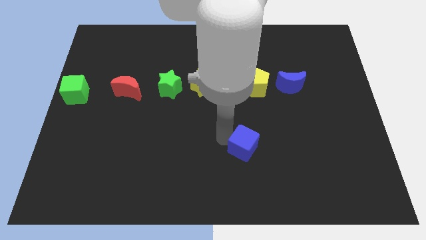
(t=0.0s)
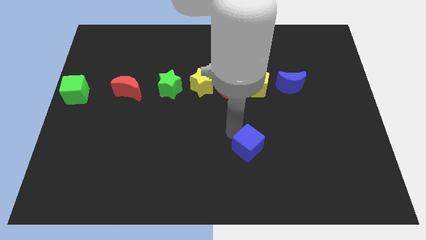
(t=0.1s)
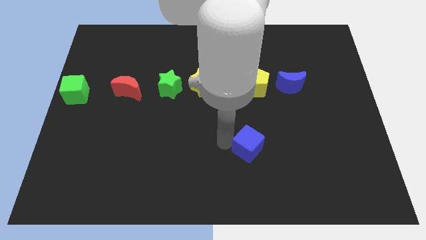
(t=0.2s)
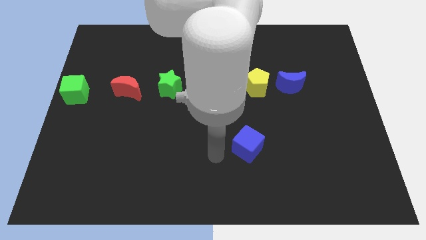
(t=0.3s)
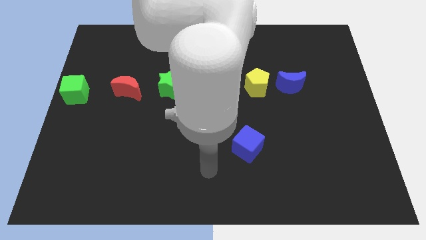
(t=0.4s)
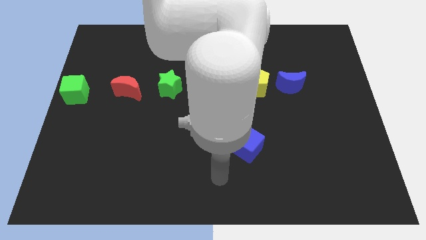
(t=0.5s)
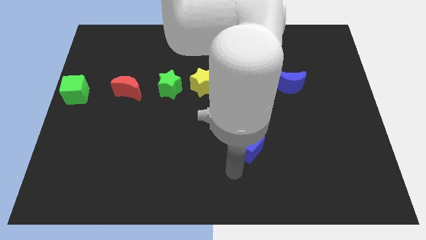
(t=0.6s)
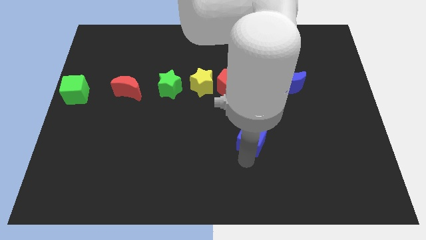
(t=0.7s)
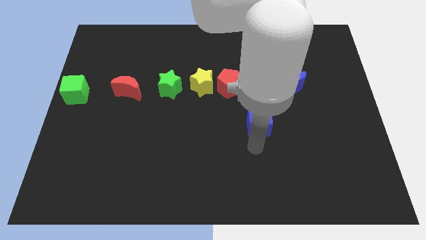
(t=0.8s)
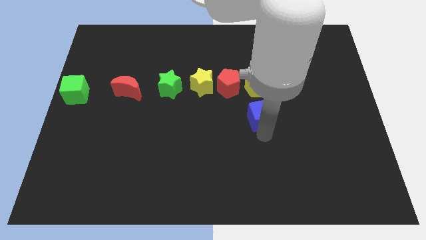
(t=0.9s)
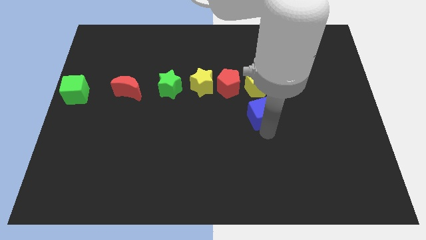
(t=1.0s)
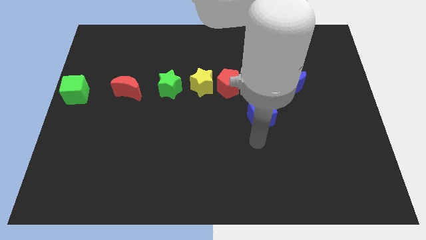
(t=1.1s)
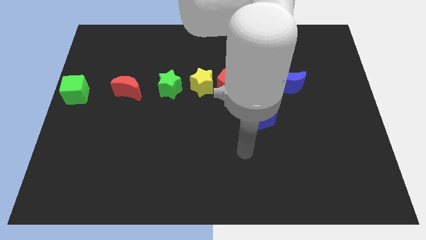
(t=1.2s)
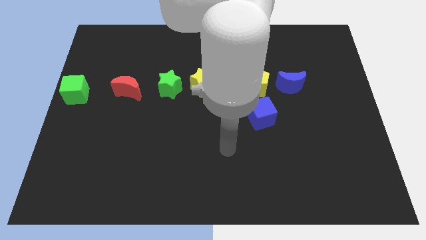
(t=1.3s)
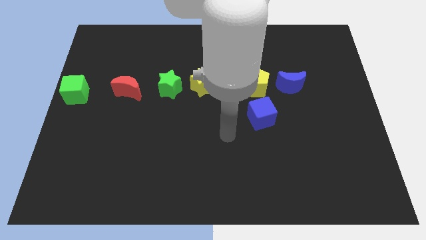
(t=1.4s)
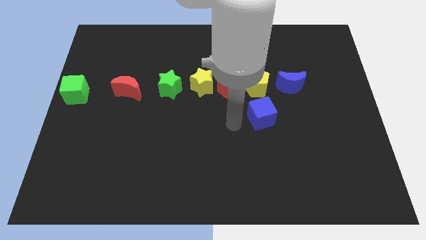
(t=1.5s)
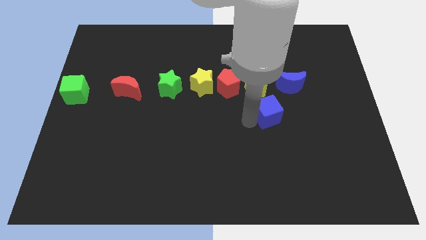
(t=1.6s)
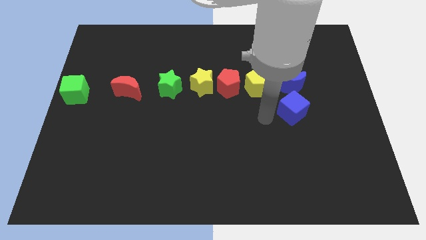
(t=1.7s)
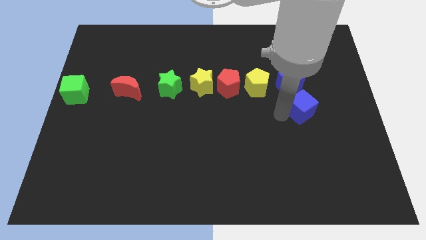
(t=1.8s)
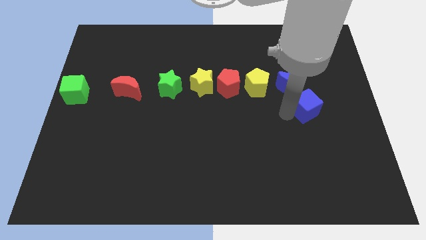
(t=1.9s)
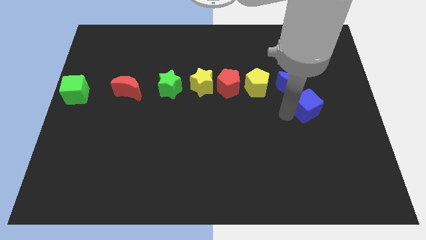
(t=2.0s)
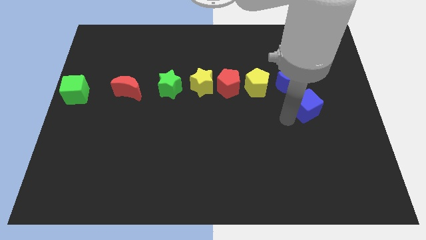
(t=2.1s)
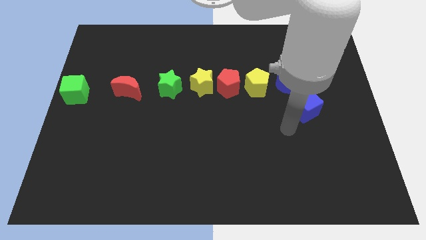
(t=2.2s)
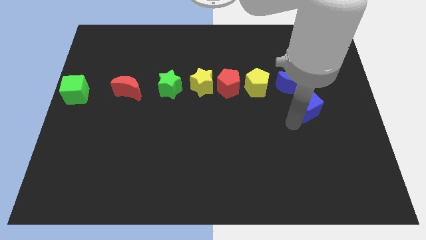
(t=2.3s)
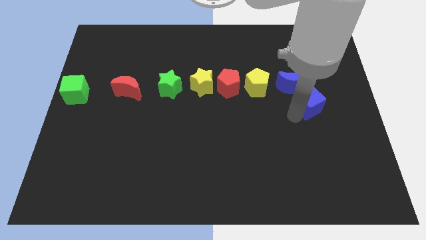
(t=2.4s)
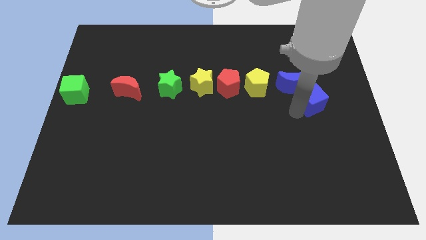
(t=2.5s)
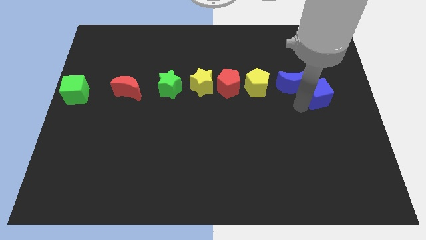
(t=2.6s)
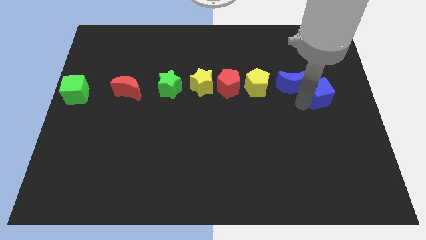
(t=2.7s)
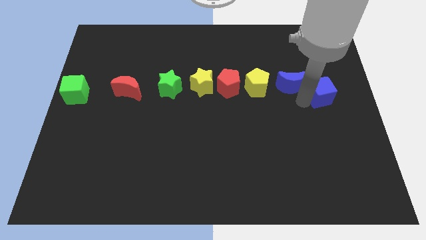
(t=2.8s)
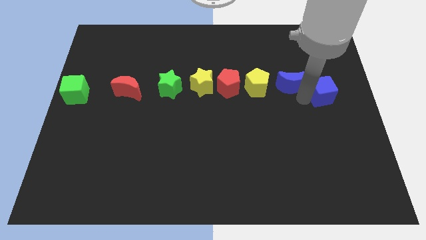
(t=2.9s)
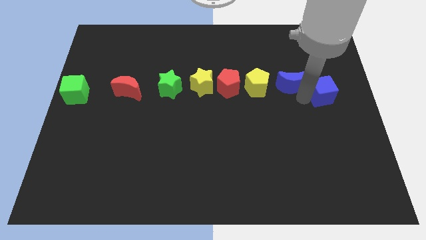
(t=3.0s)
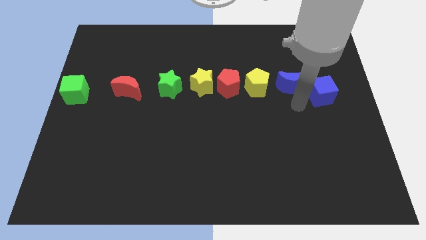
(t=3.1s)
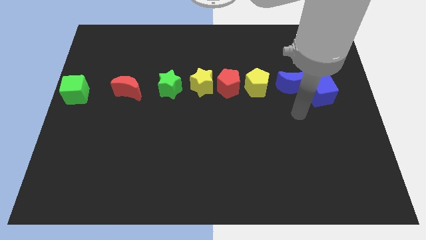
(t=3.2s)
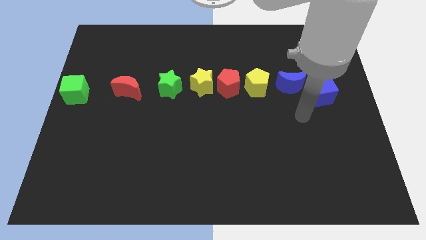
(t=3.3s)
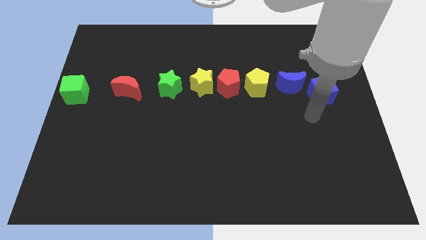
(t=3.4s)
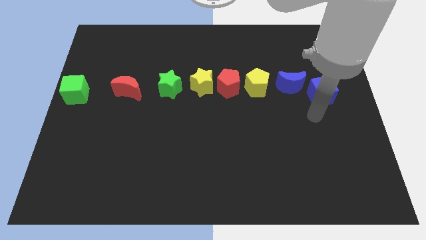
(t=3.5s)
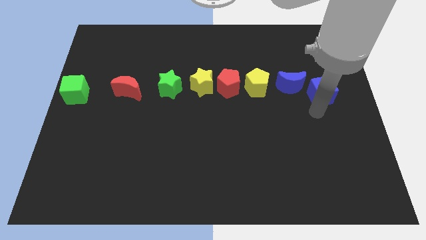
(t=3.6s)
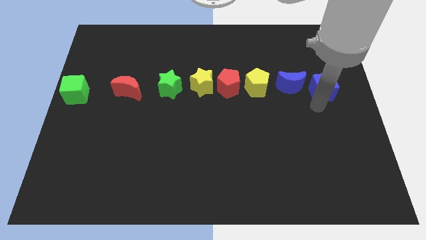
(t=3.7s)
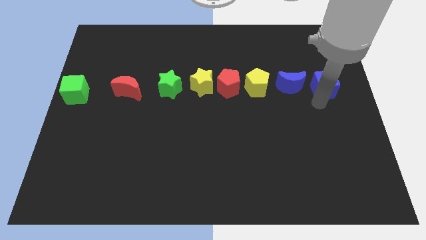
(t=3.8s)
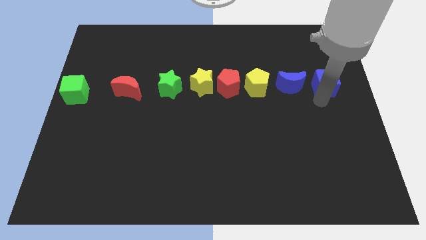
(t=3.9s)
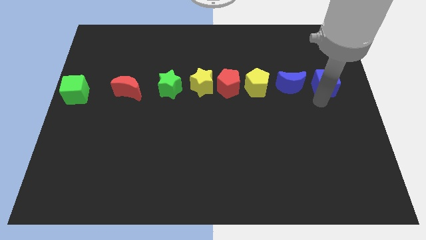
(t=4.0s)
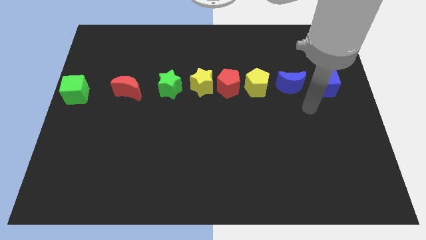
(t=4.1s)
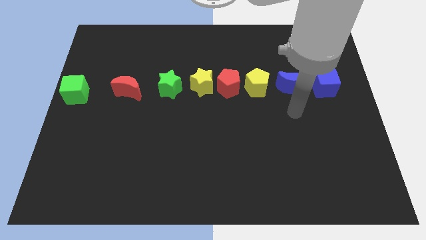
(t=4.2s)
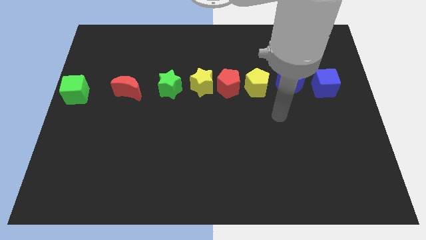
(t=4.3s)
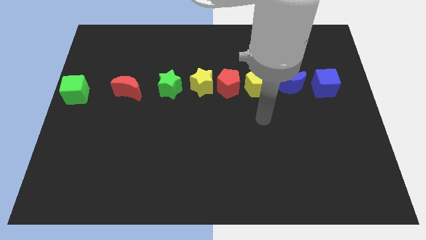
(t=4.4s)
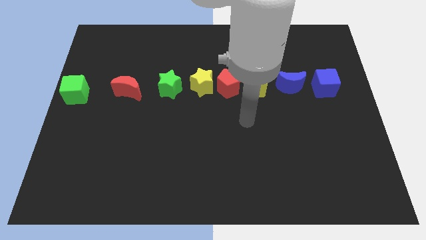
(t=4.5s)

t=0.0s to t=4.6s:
push the blue cube to the right of the blue crescent

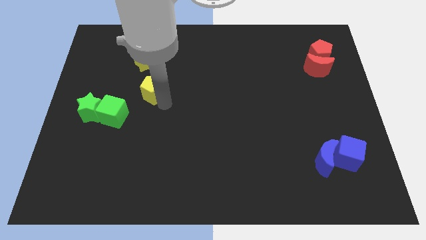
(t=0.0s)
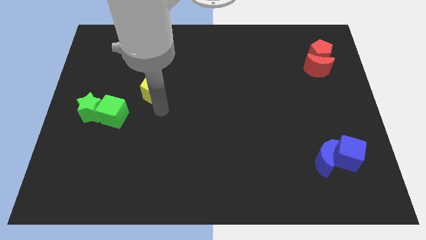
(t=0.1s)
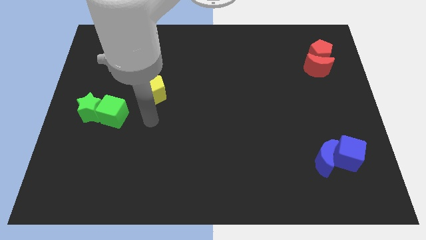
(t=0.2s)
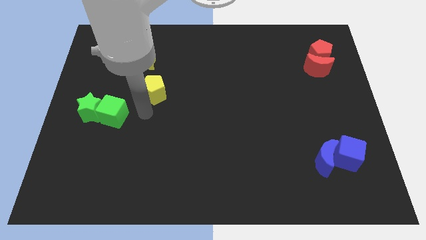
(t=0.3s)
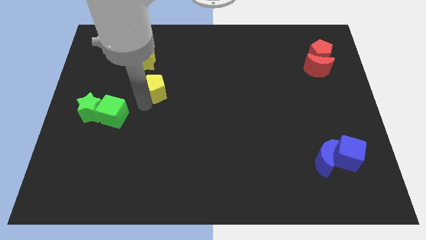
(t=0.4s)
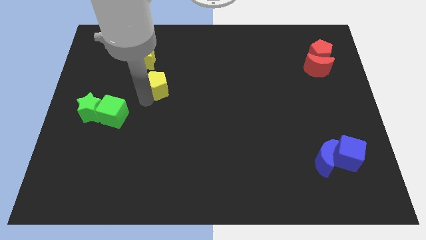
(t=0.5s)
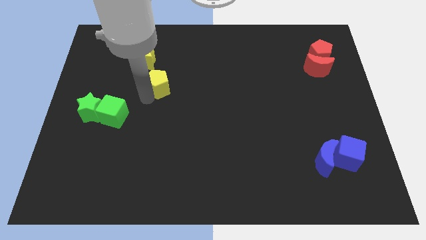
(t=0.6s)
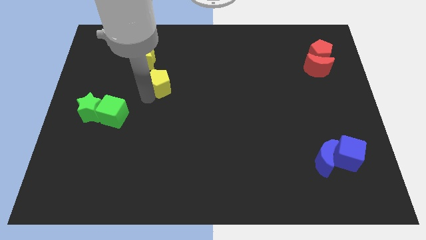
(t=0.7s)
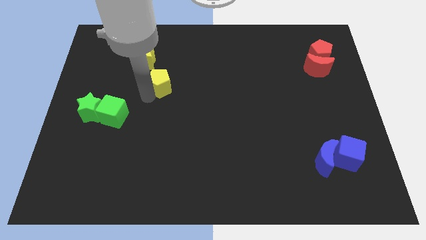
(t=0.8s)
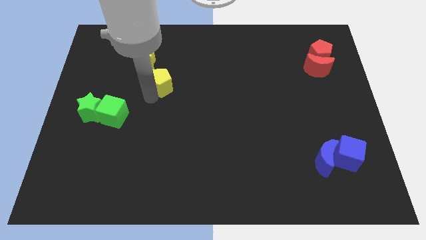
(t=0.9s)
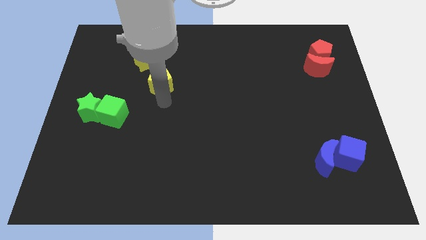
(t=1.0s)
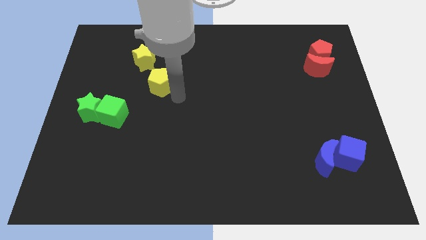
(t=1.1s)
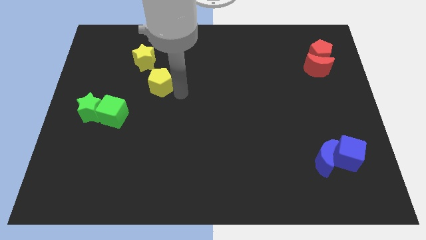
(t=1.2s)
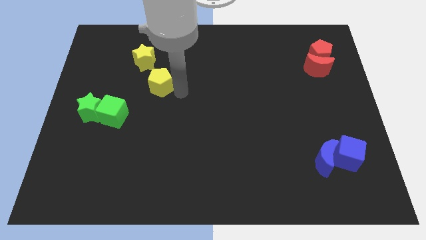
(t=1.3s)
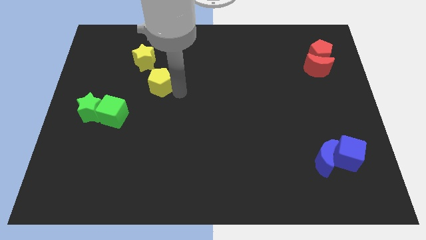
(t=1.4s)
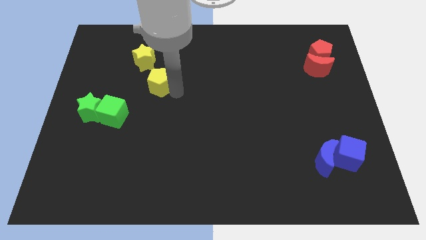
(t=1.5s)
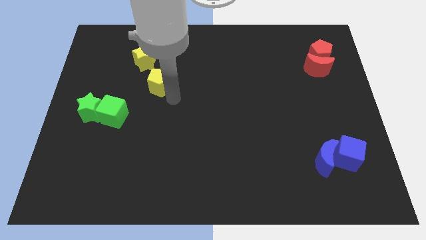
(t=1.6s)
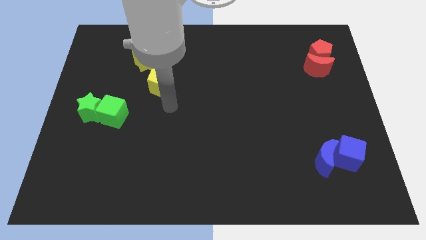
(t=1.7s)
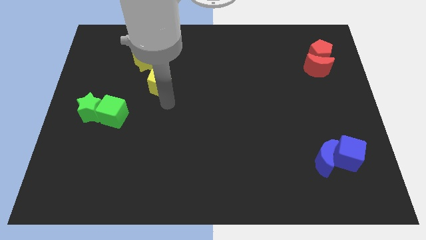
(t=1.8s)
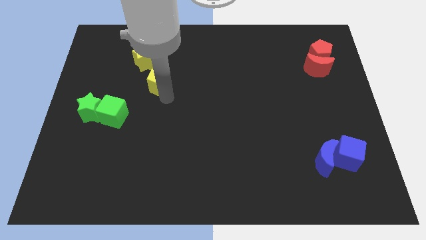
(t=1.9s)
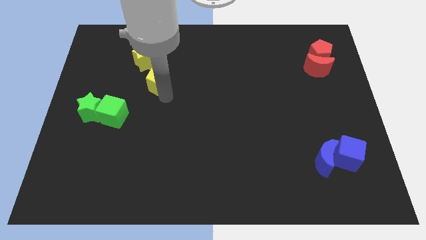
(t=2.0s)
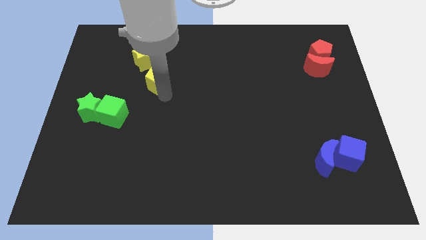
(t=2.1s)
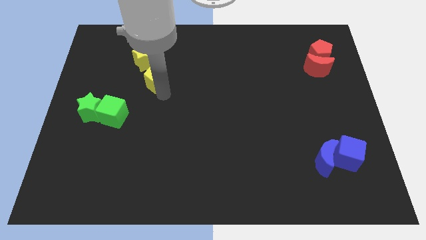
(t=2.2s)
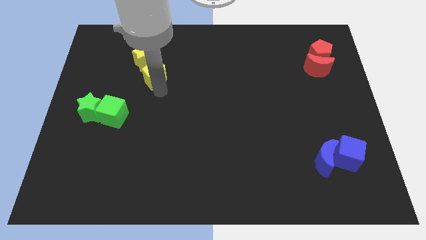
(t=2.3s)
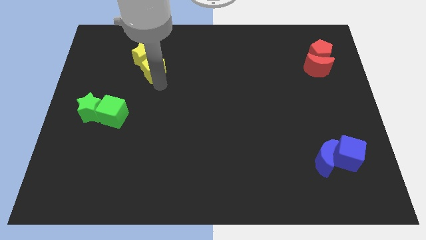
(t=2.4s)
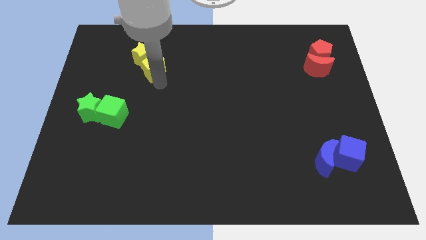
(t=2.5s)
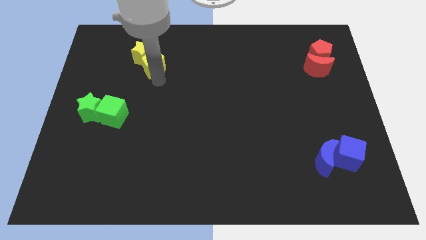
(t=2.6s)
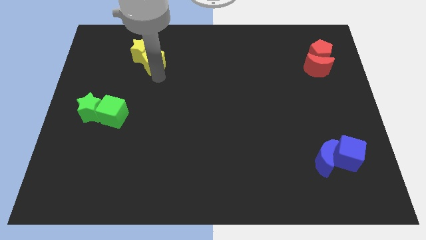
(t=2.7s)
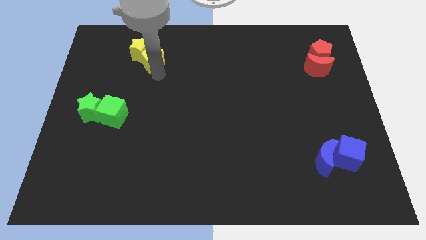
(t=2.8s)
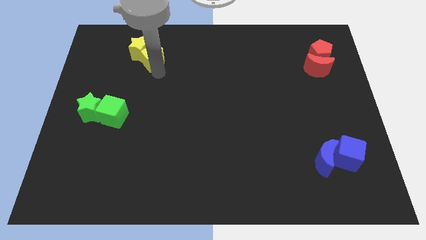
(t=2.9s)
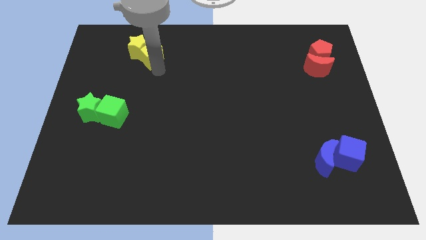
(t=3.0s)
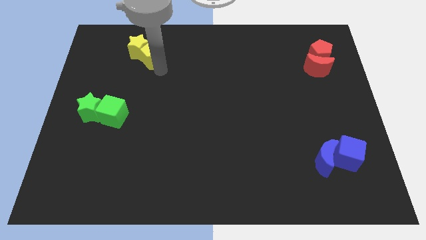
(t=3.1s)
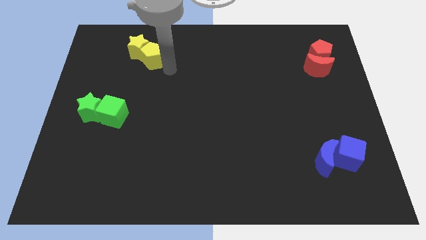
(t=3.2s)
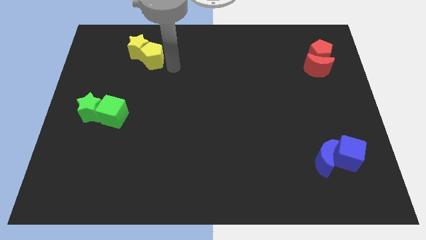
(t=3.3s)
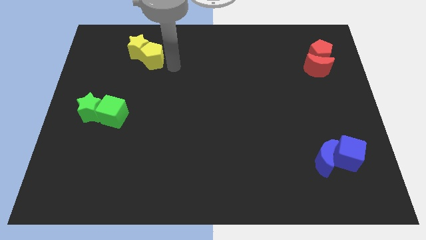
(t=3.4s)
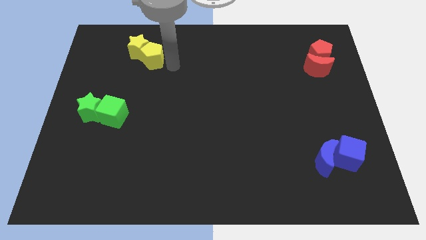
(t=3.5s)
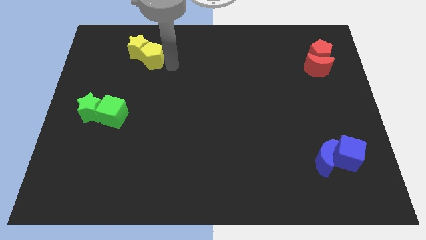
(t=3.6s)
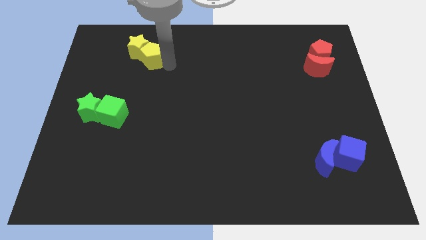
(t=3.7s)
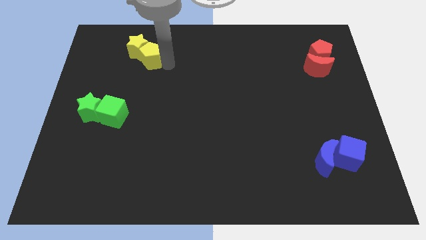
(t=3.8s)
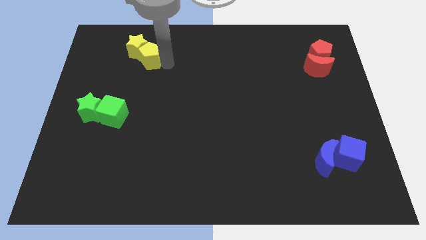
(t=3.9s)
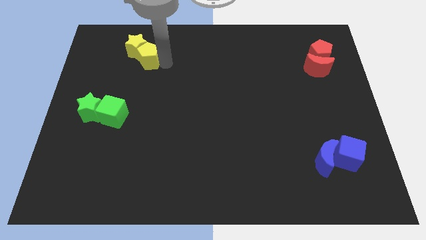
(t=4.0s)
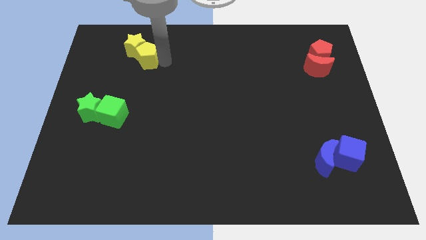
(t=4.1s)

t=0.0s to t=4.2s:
push the yellow blocks towards the top left

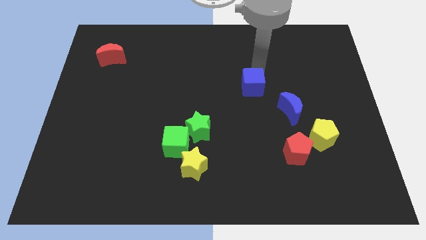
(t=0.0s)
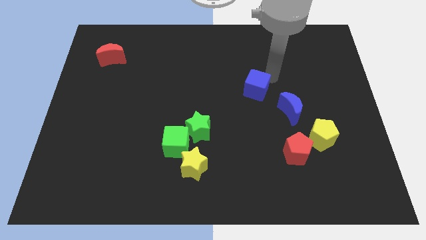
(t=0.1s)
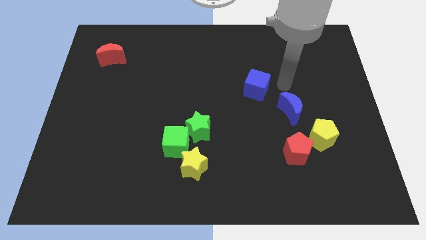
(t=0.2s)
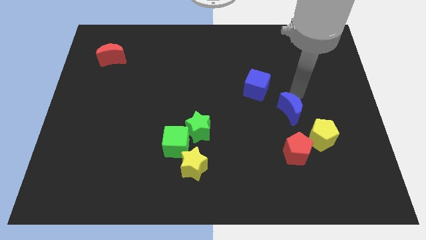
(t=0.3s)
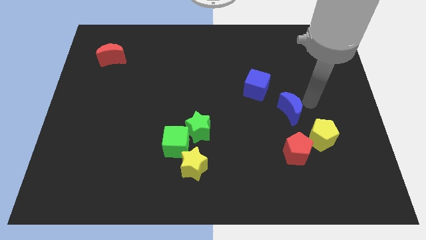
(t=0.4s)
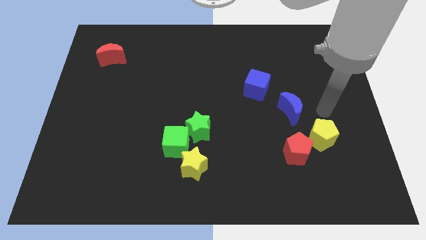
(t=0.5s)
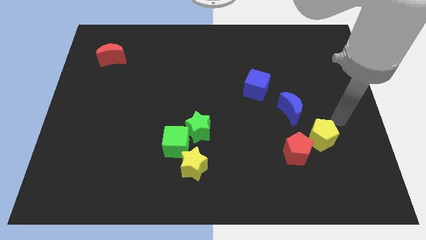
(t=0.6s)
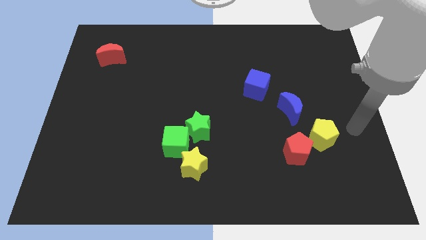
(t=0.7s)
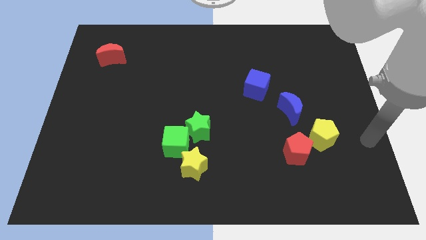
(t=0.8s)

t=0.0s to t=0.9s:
place your arm to the right of yellow pentagon
